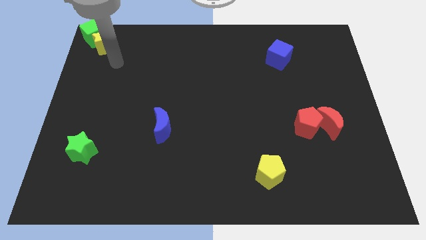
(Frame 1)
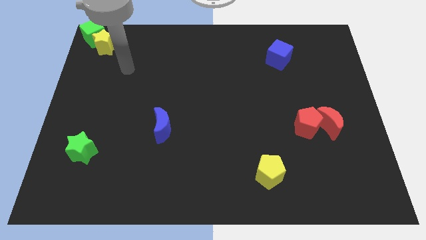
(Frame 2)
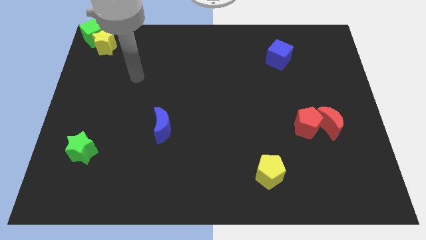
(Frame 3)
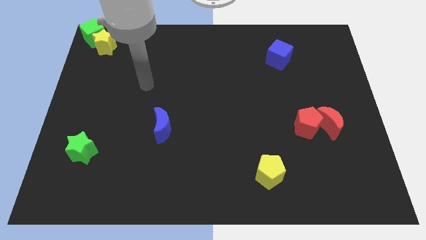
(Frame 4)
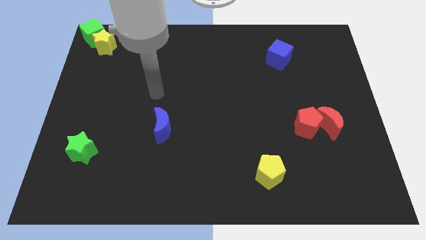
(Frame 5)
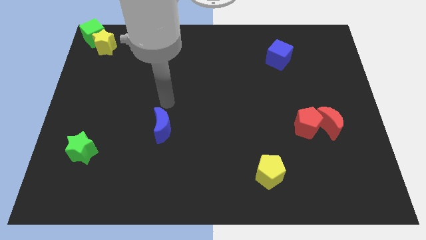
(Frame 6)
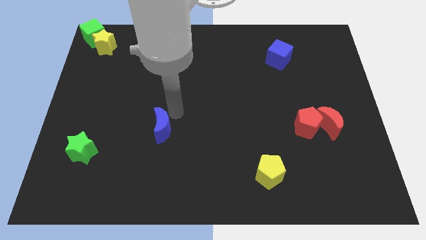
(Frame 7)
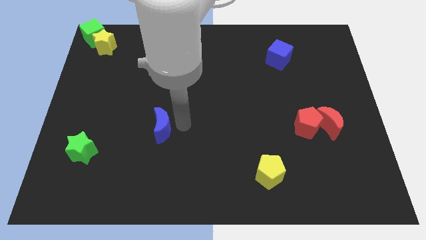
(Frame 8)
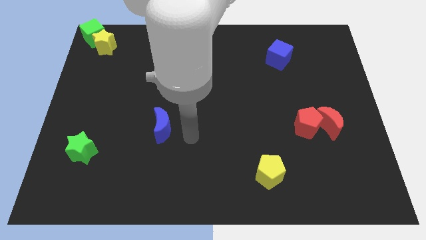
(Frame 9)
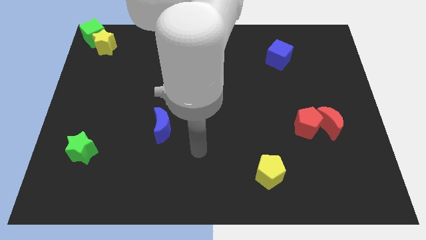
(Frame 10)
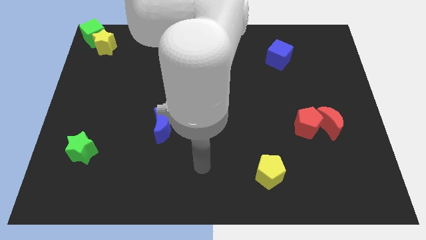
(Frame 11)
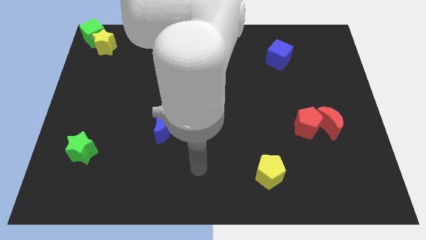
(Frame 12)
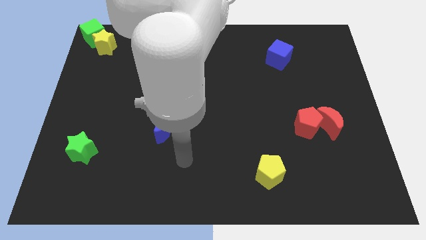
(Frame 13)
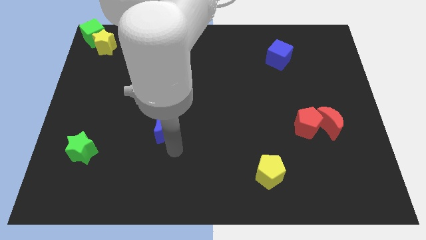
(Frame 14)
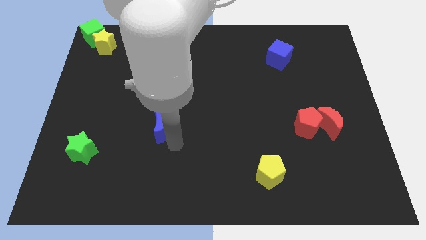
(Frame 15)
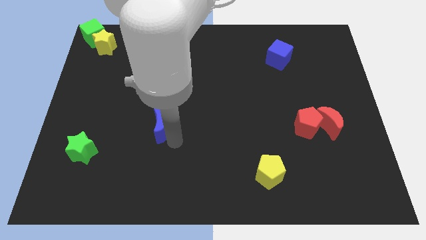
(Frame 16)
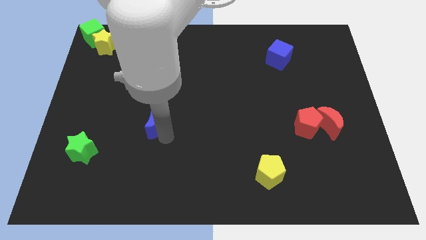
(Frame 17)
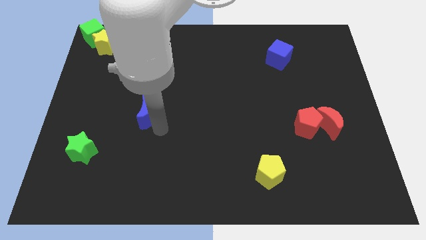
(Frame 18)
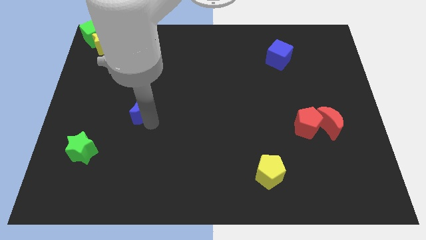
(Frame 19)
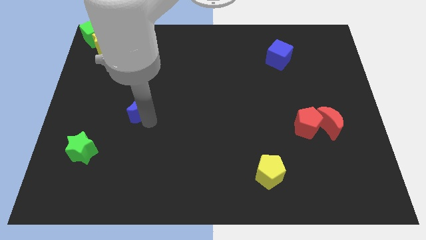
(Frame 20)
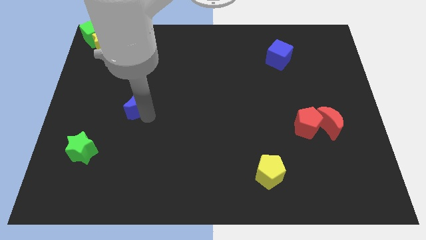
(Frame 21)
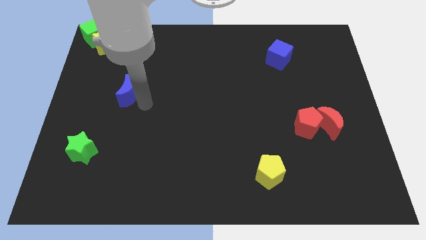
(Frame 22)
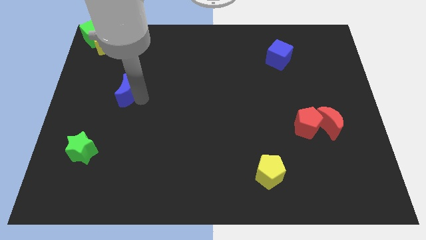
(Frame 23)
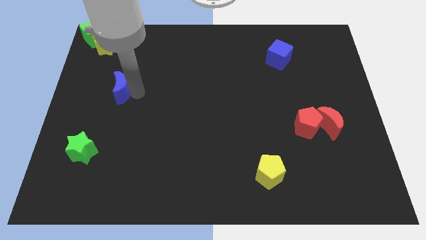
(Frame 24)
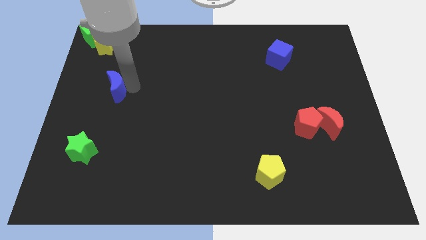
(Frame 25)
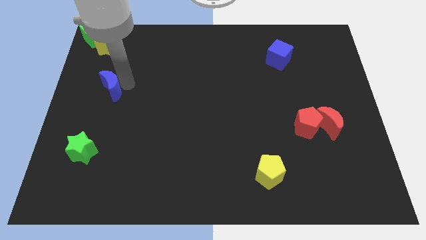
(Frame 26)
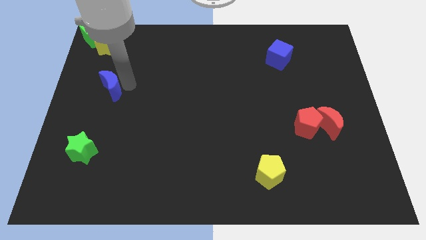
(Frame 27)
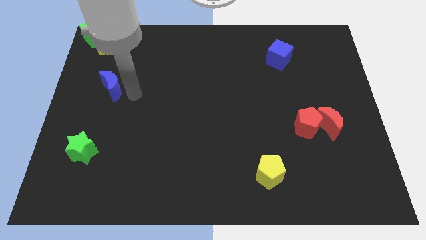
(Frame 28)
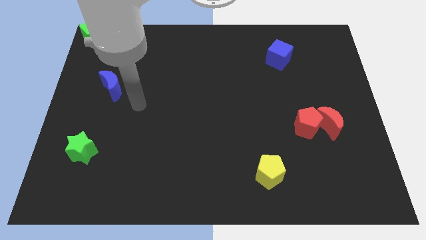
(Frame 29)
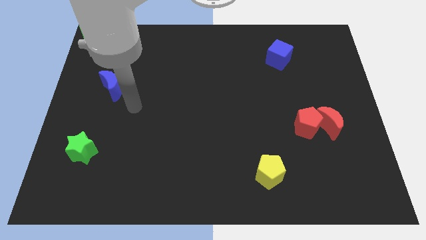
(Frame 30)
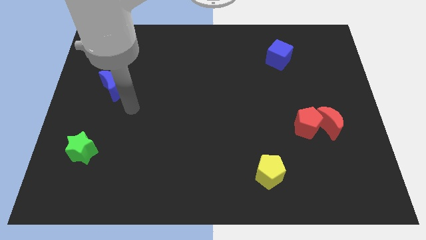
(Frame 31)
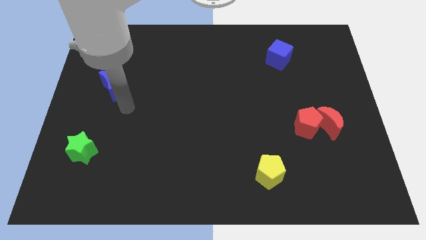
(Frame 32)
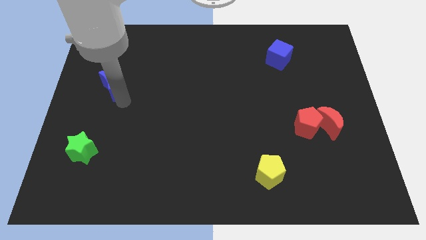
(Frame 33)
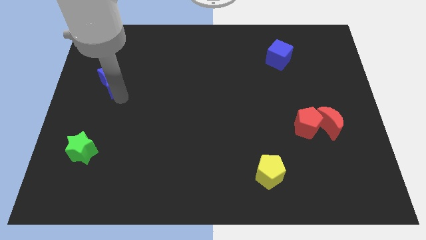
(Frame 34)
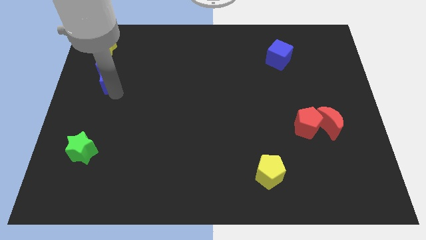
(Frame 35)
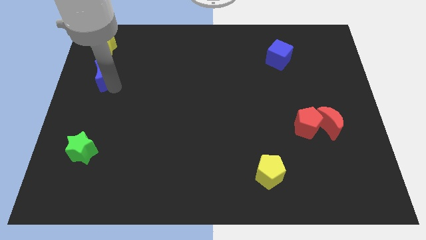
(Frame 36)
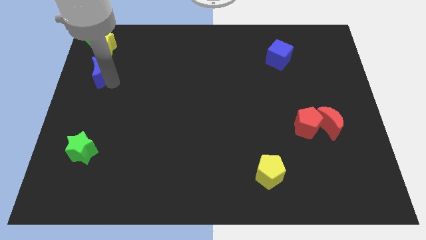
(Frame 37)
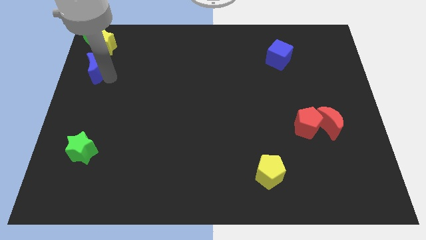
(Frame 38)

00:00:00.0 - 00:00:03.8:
push the blue crescent to the bottom of the yellow star

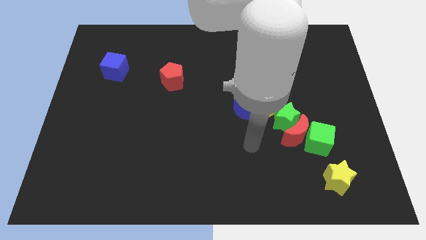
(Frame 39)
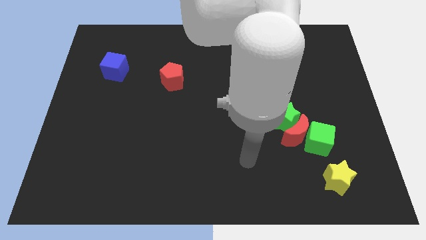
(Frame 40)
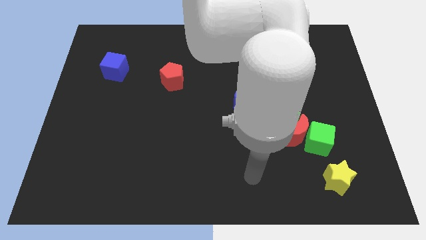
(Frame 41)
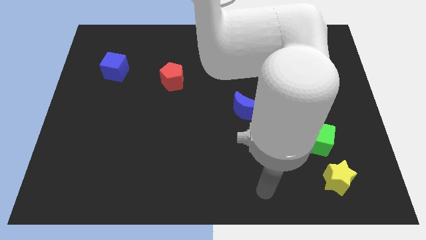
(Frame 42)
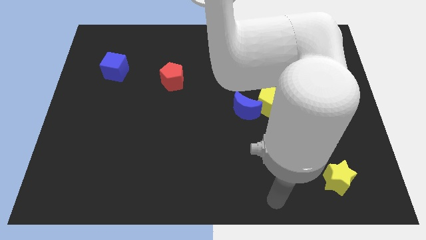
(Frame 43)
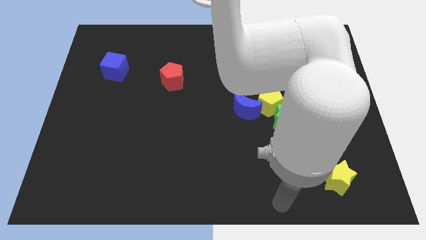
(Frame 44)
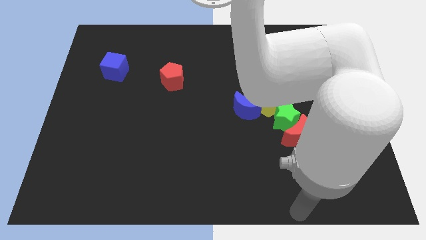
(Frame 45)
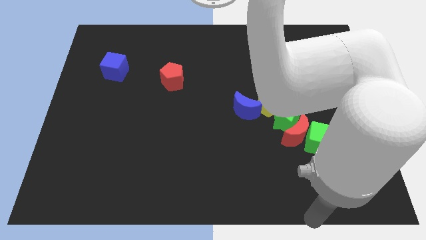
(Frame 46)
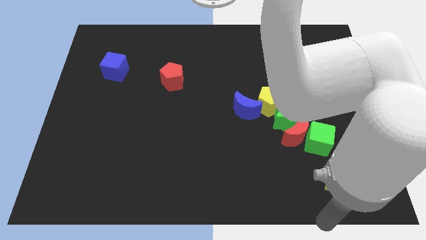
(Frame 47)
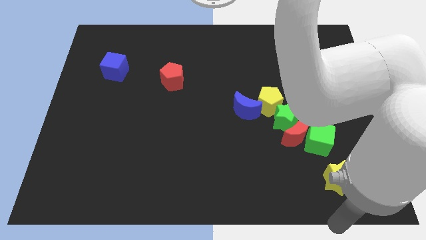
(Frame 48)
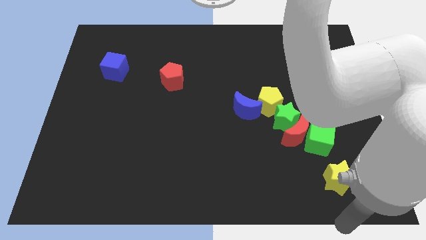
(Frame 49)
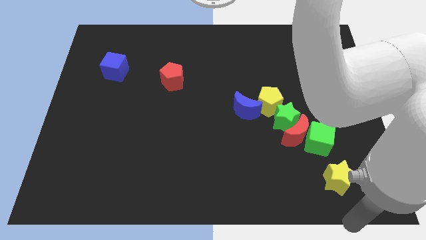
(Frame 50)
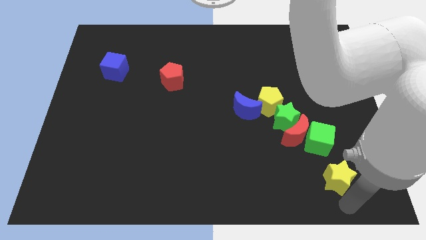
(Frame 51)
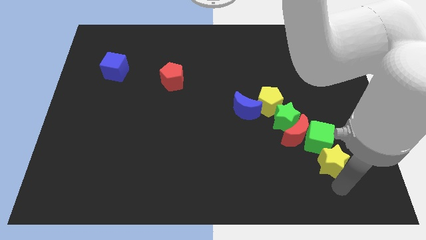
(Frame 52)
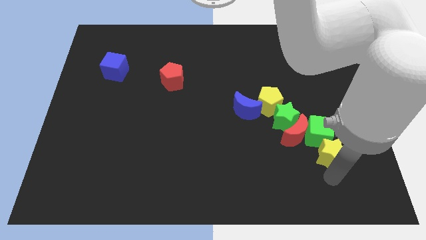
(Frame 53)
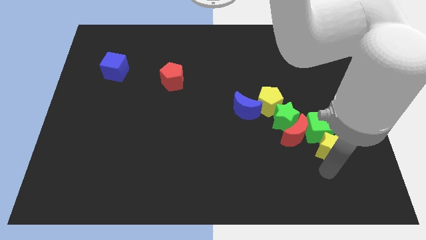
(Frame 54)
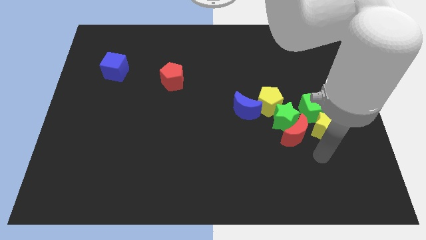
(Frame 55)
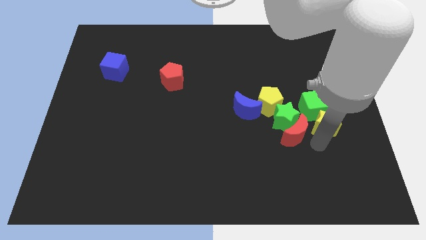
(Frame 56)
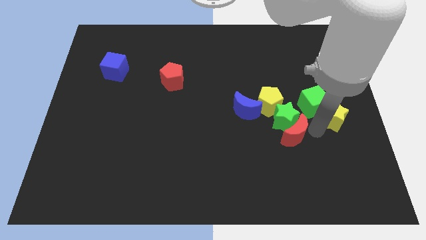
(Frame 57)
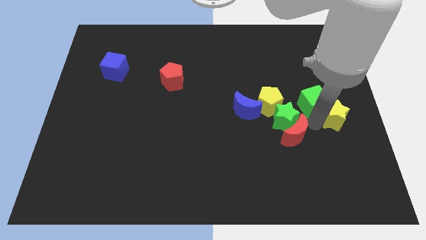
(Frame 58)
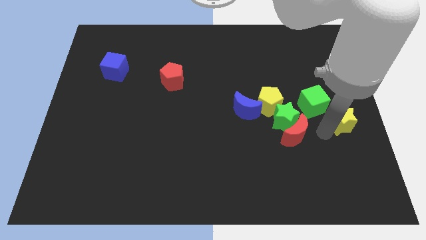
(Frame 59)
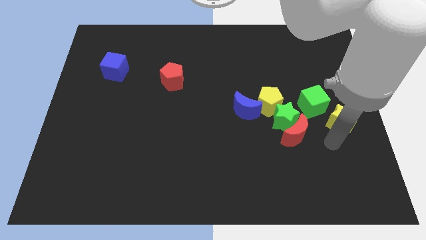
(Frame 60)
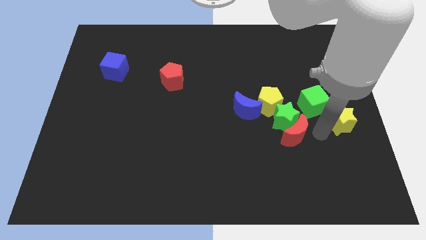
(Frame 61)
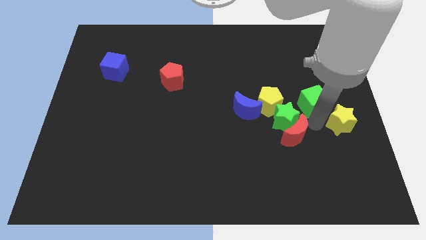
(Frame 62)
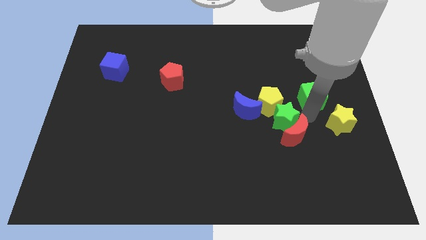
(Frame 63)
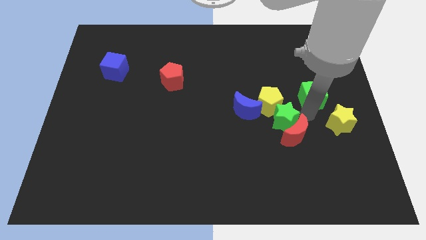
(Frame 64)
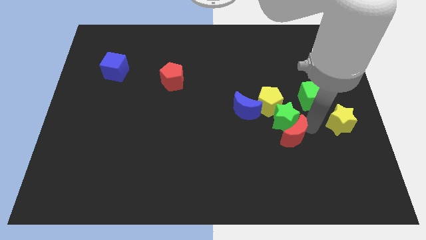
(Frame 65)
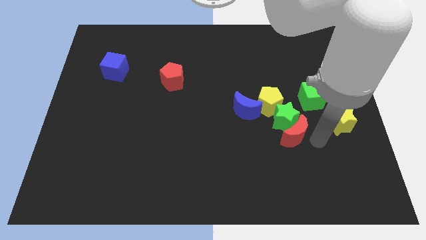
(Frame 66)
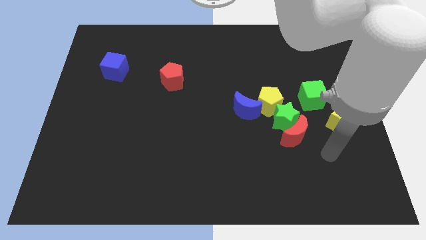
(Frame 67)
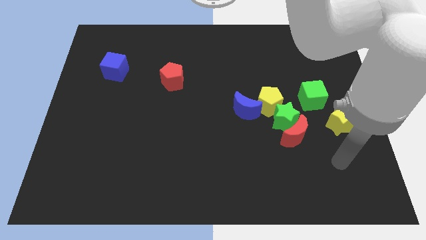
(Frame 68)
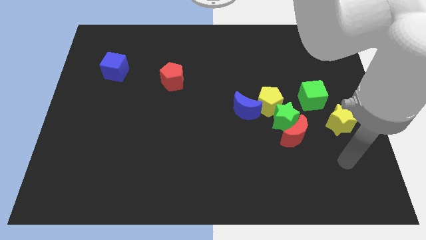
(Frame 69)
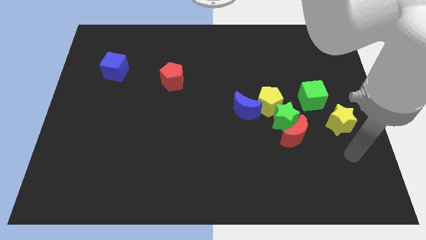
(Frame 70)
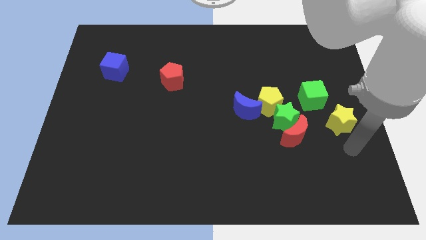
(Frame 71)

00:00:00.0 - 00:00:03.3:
push the yellow star and green cube to the right side of the group of blocks

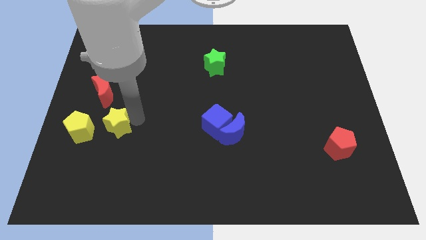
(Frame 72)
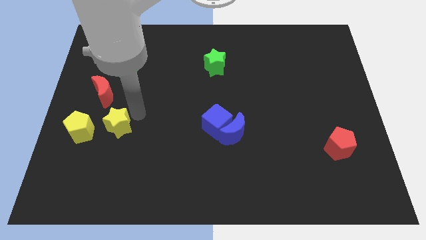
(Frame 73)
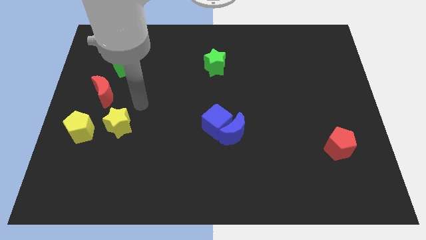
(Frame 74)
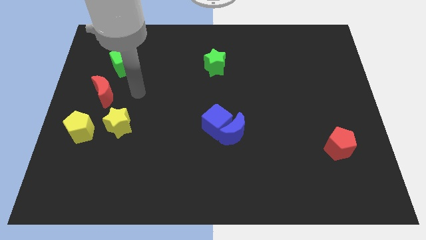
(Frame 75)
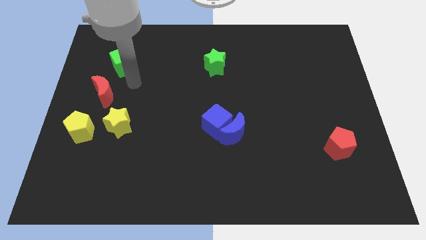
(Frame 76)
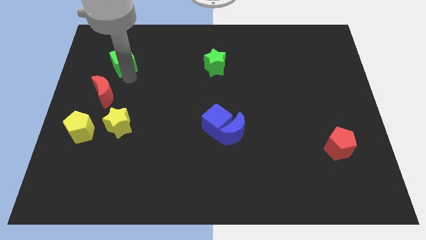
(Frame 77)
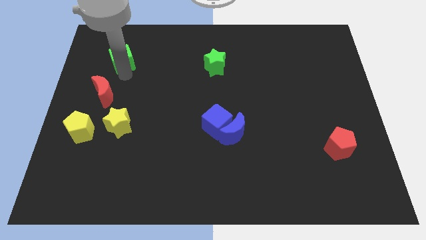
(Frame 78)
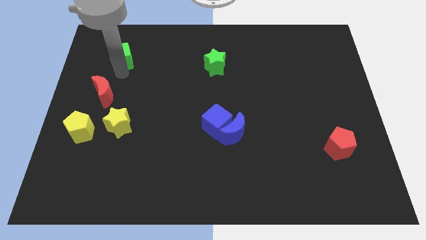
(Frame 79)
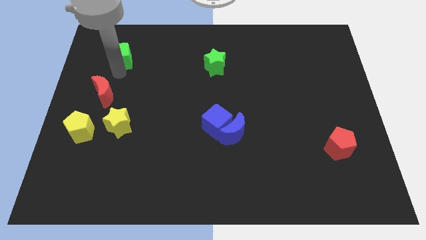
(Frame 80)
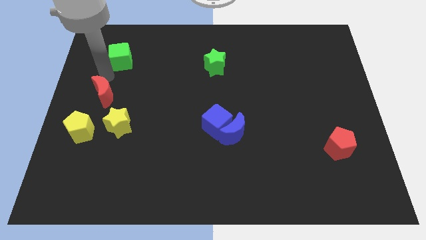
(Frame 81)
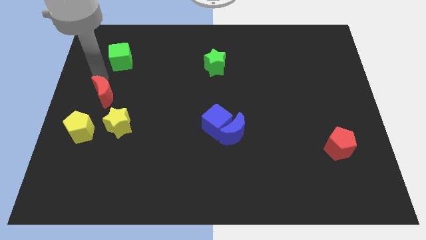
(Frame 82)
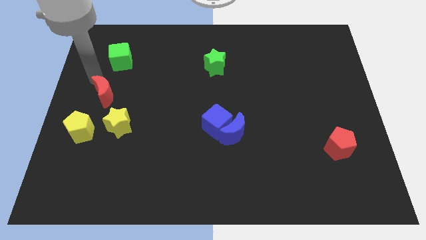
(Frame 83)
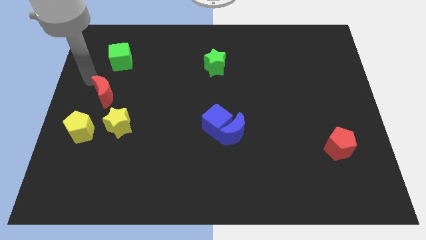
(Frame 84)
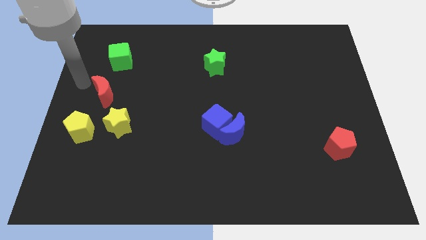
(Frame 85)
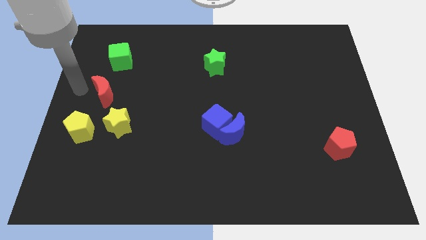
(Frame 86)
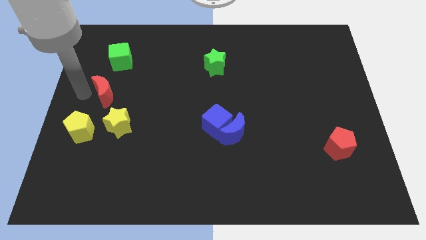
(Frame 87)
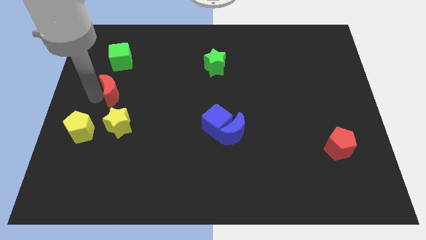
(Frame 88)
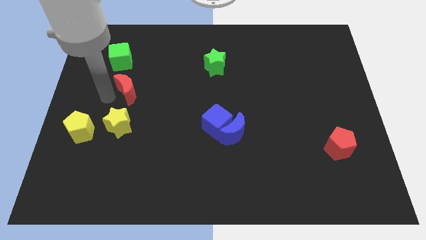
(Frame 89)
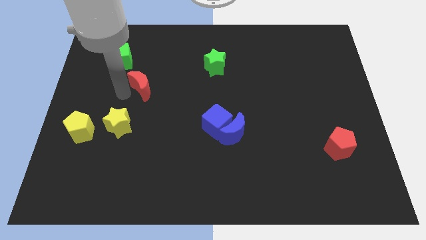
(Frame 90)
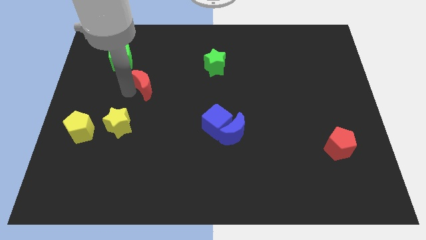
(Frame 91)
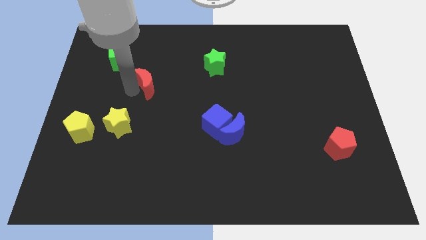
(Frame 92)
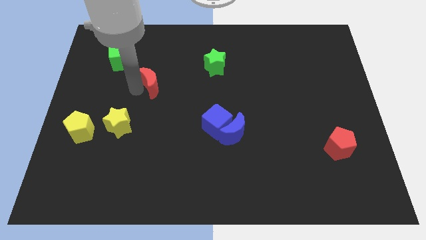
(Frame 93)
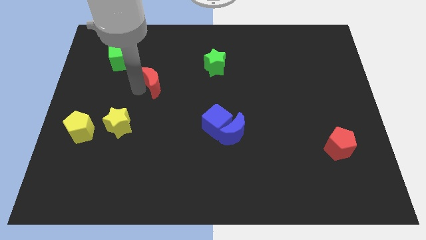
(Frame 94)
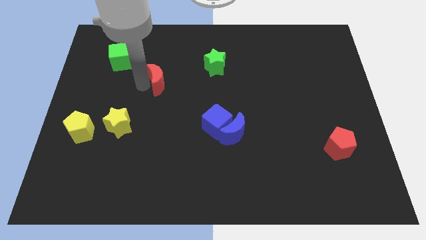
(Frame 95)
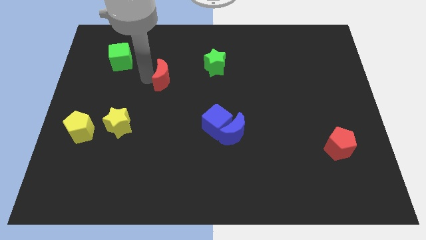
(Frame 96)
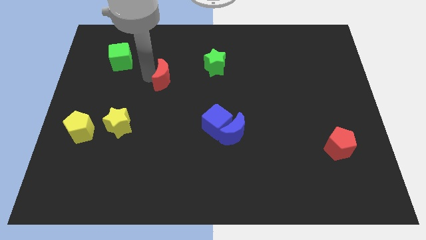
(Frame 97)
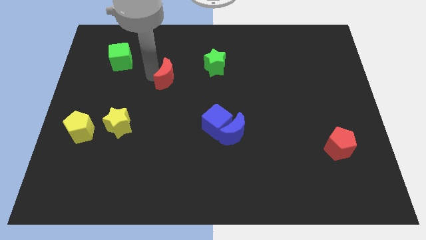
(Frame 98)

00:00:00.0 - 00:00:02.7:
push the red crescent diagonally to the bottom right of the green cube
